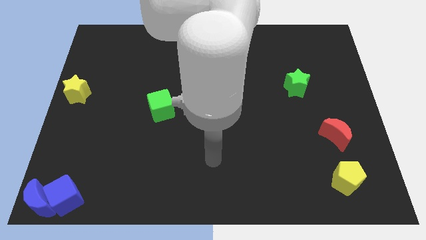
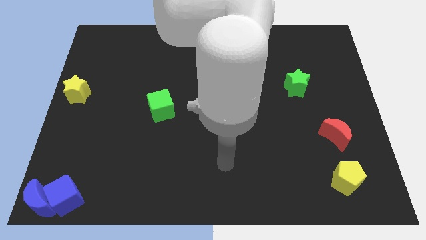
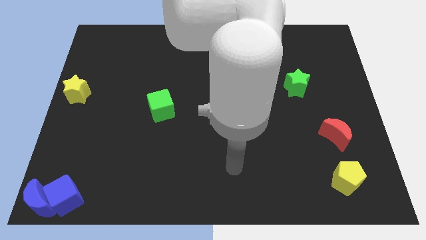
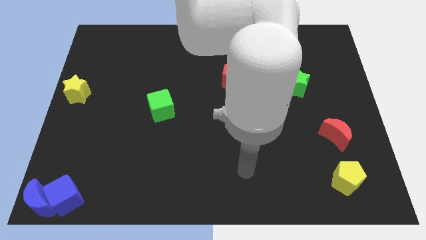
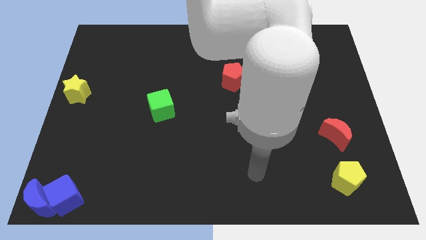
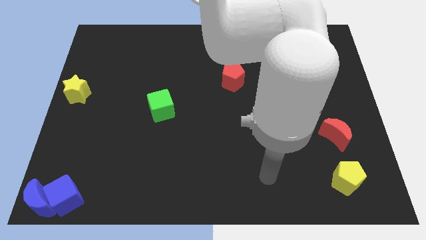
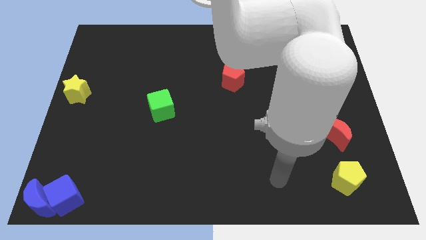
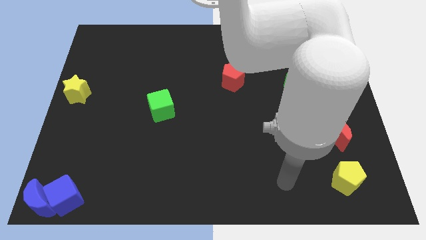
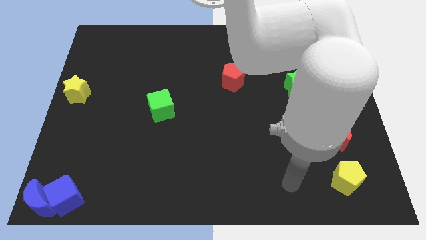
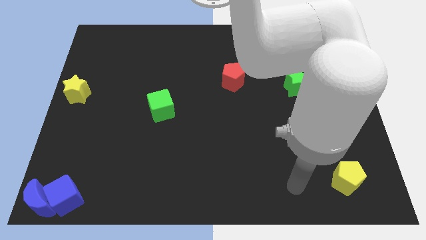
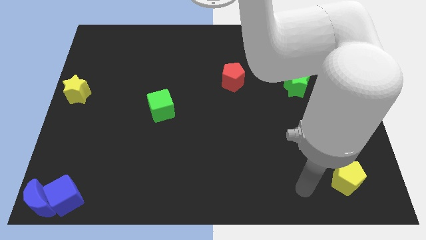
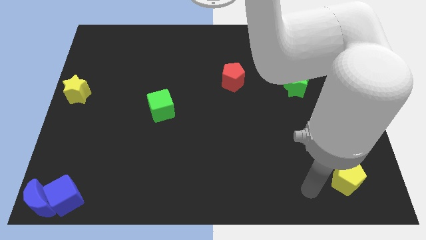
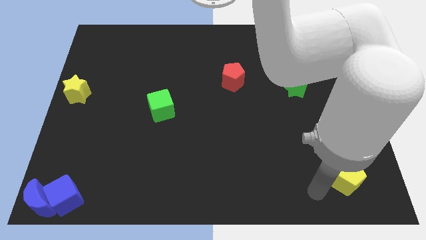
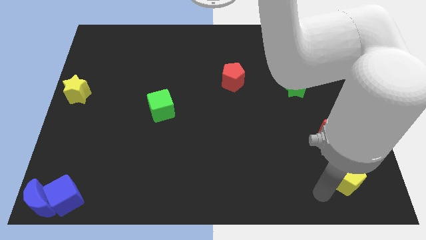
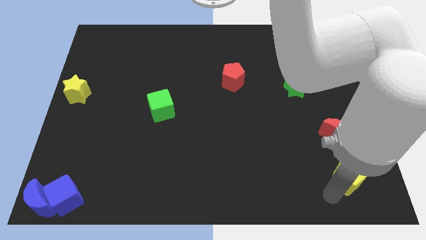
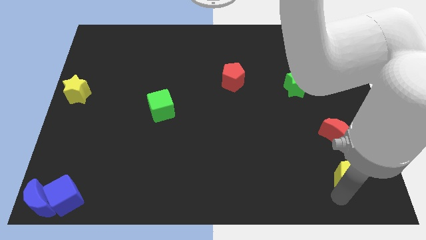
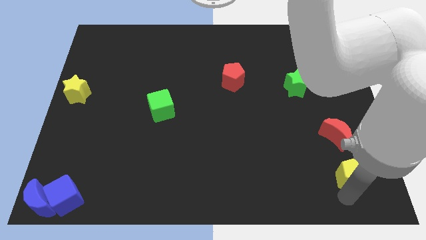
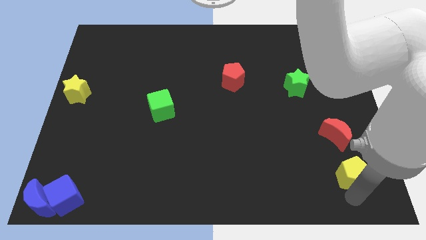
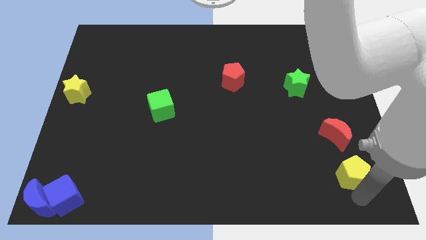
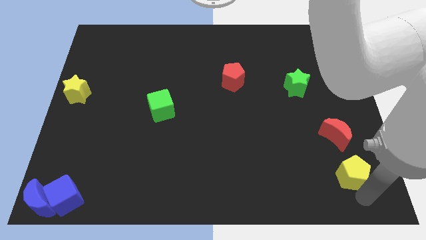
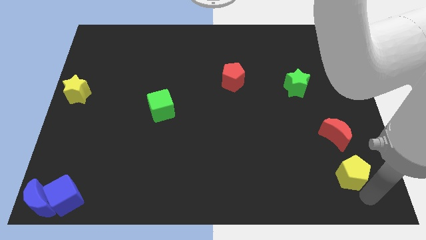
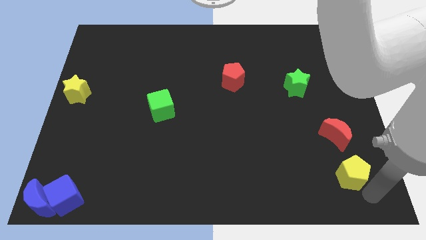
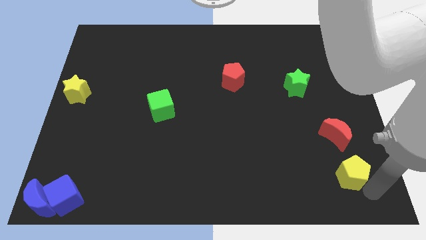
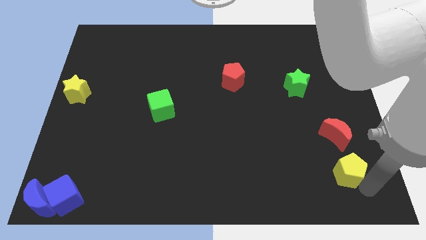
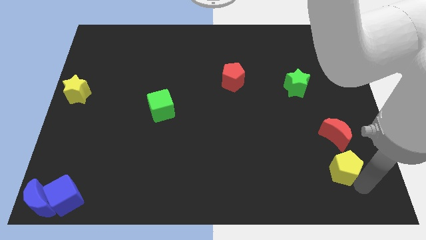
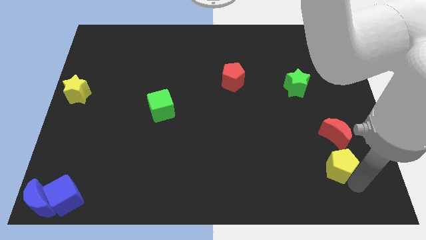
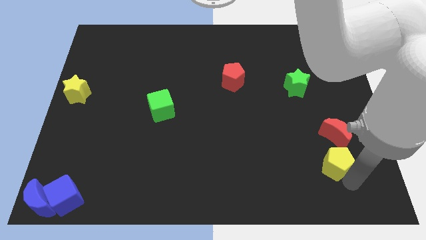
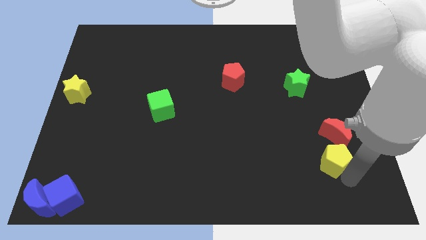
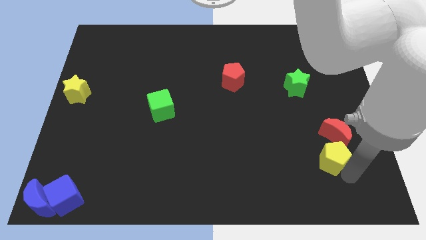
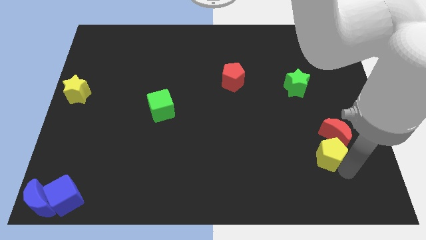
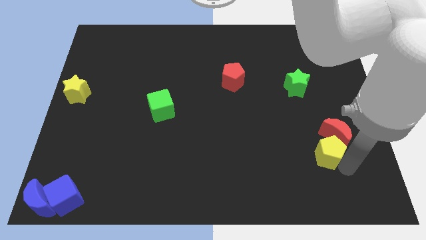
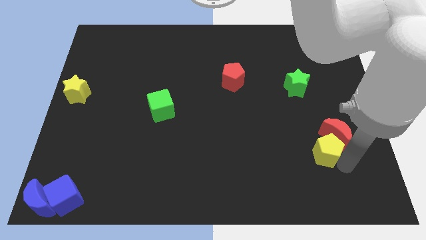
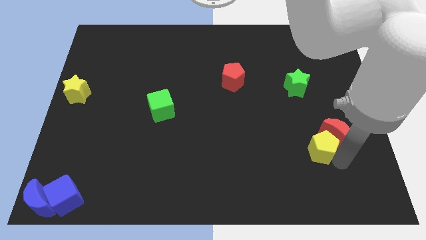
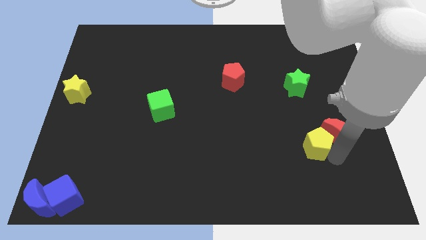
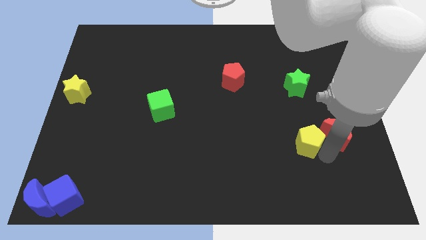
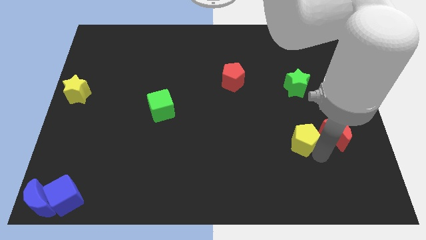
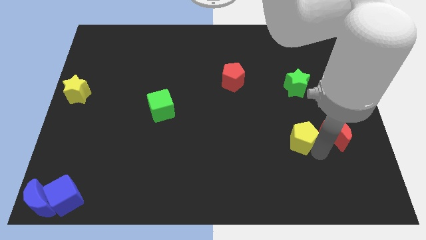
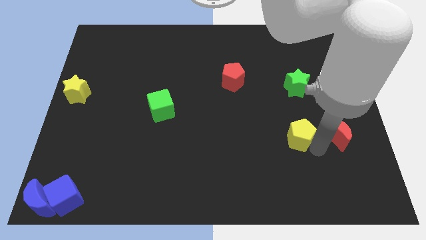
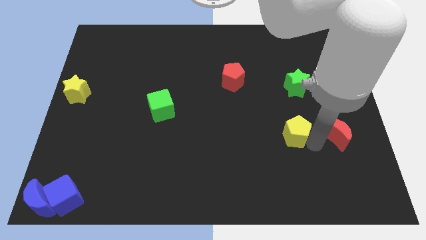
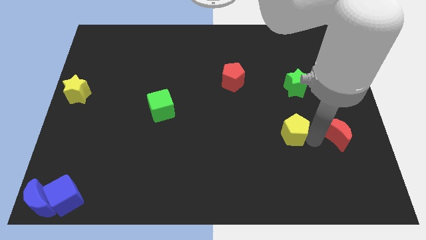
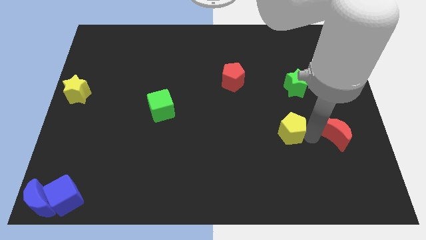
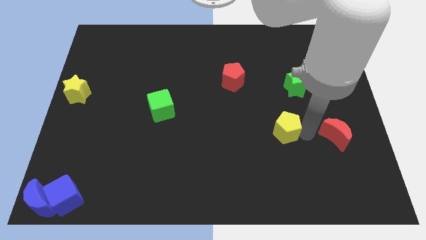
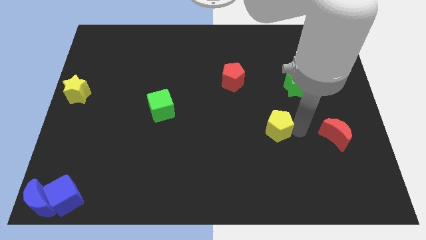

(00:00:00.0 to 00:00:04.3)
move yellow pentagon to the left of red moon

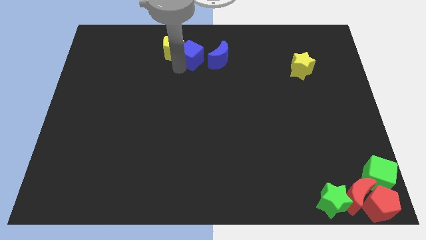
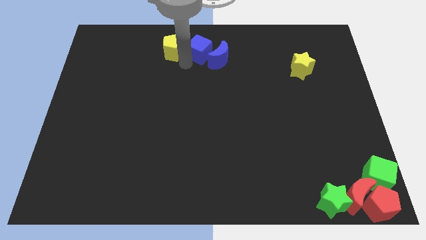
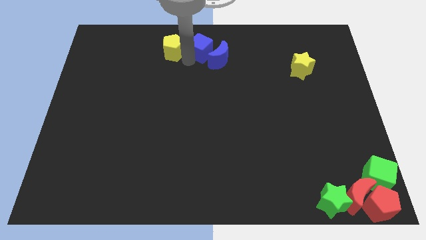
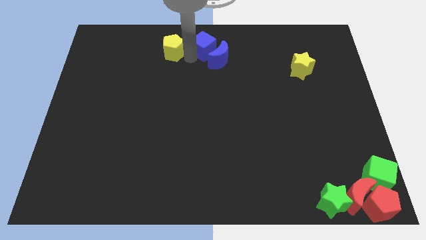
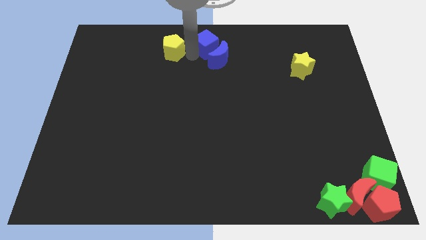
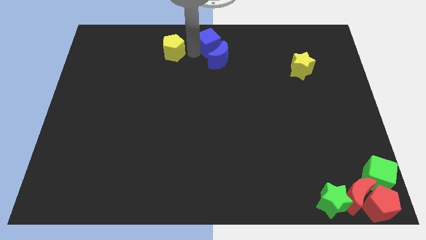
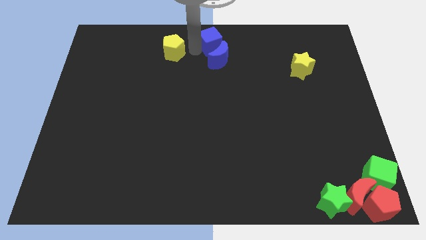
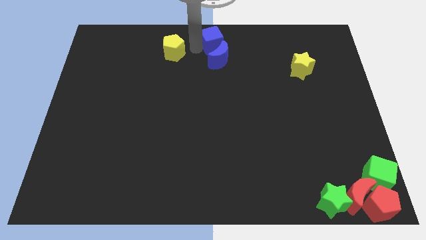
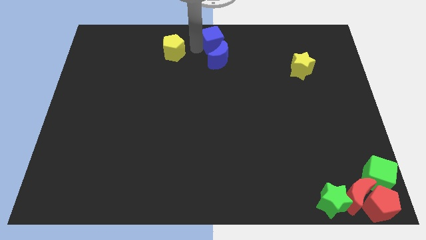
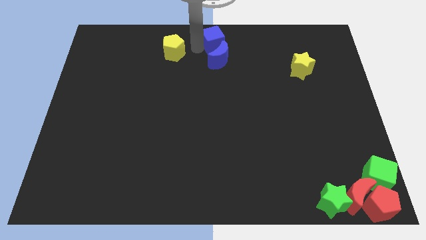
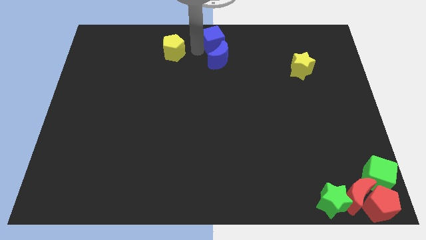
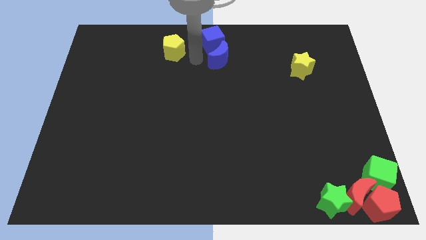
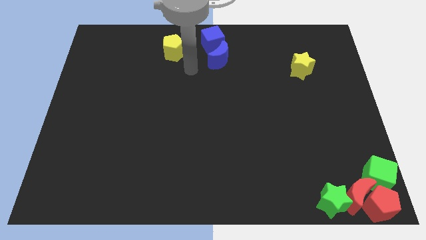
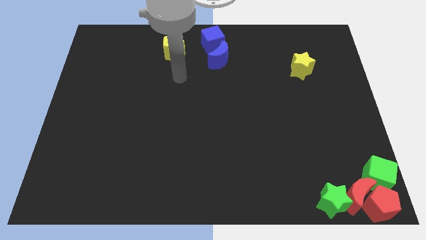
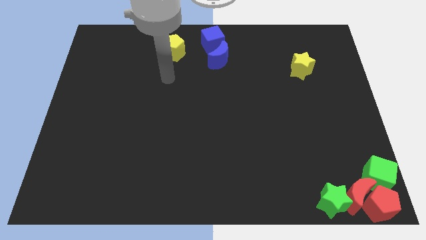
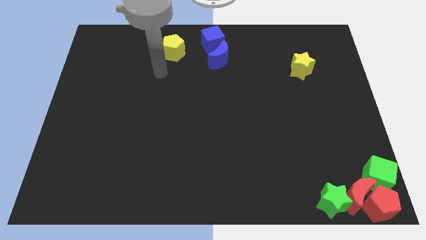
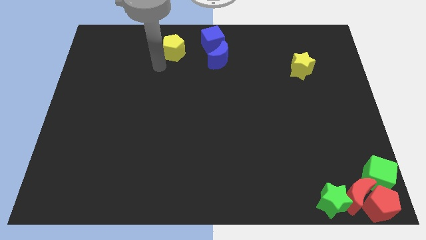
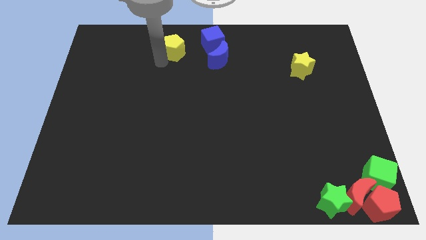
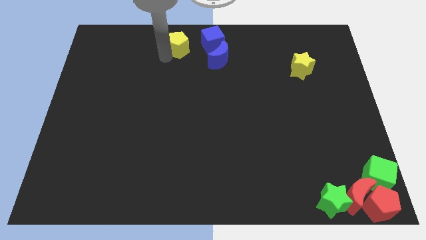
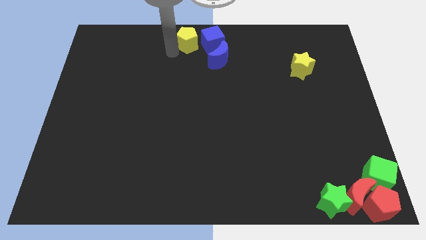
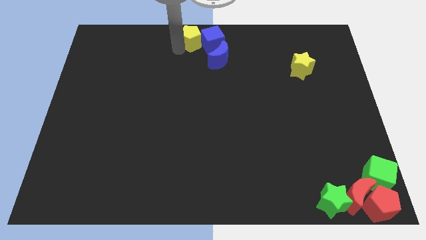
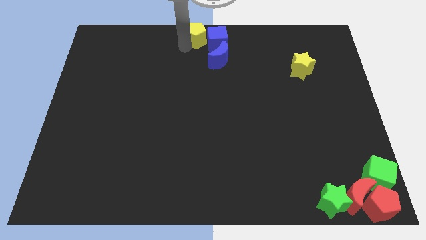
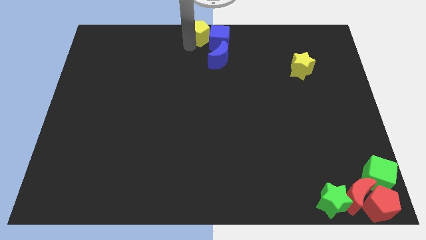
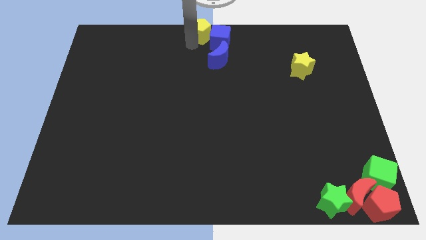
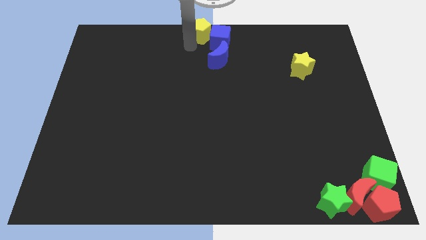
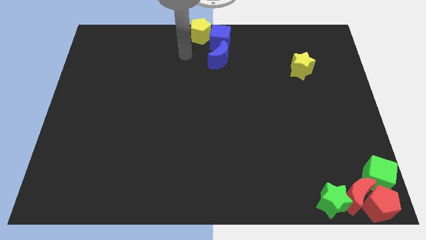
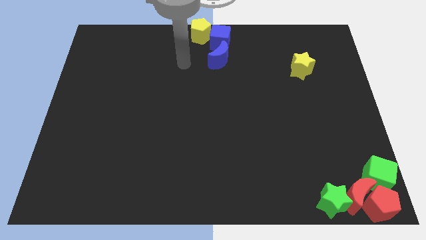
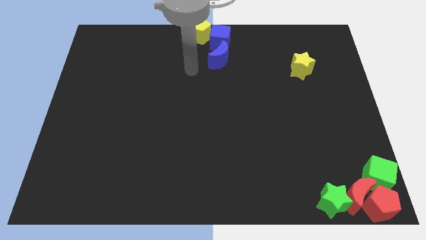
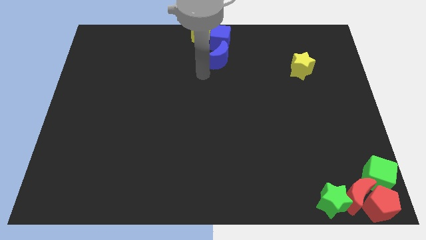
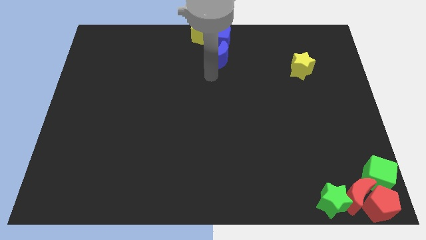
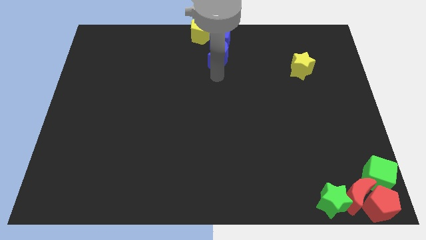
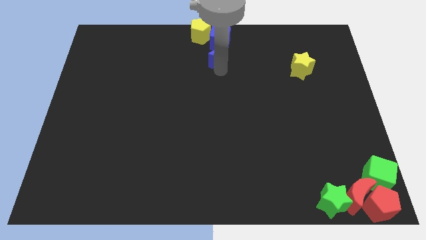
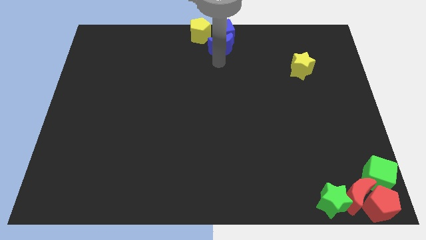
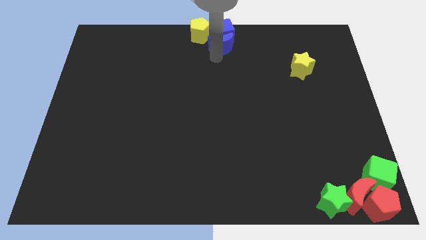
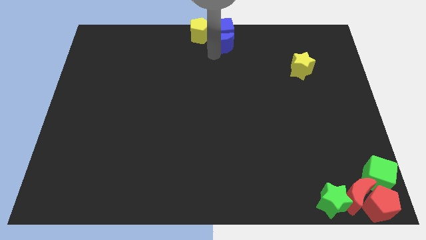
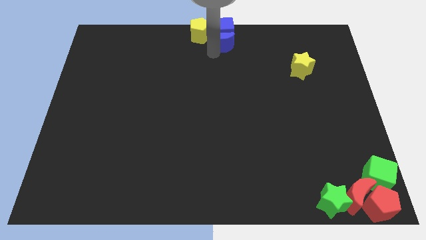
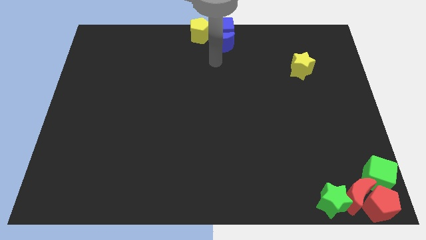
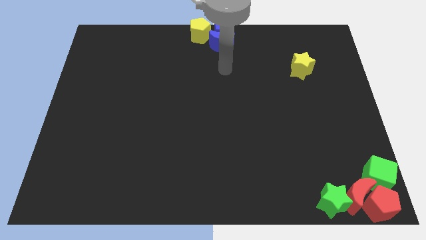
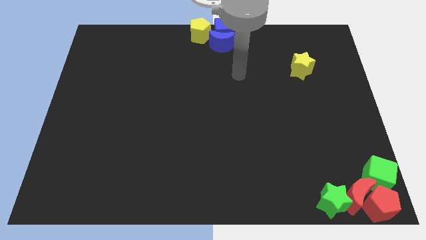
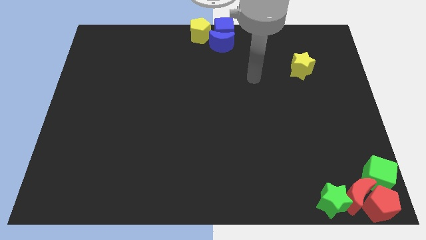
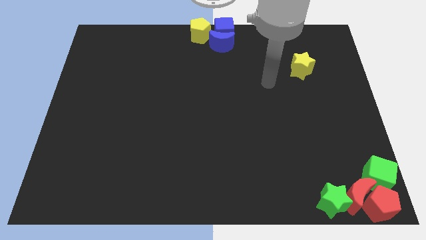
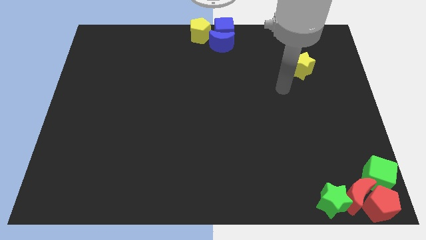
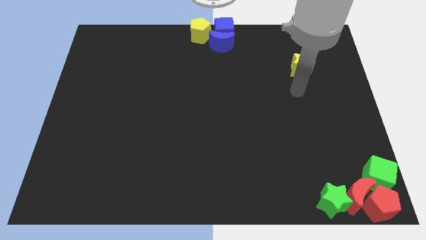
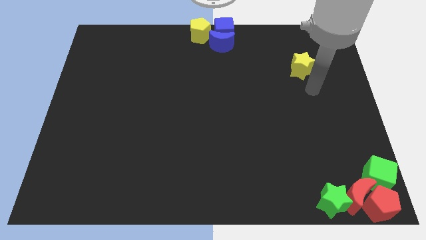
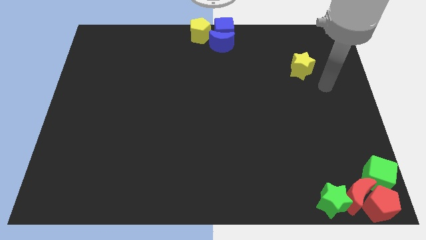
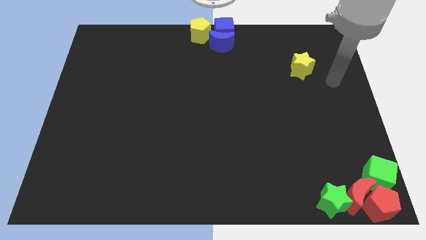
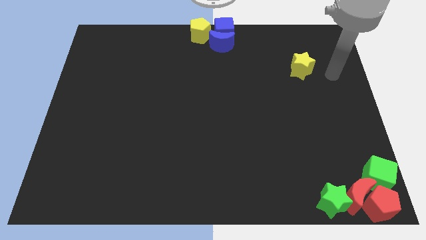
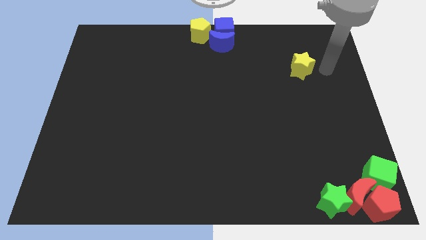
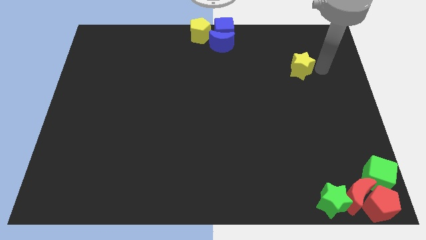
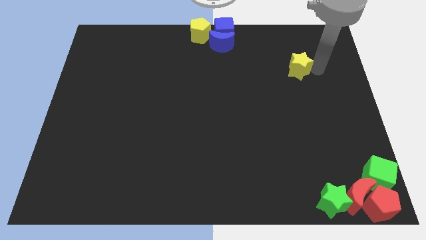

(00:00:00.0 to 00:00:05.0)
move the group of both blue blocks and yellow pentagon to the top center of the board
